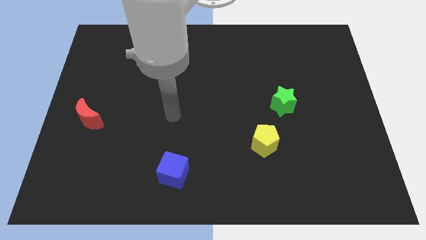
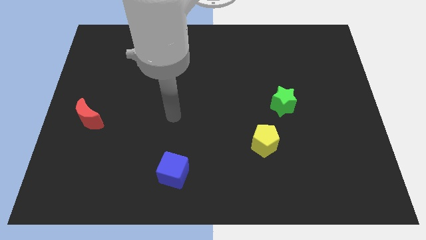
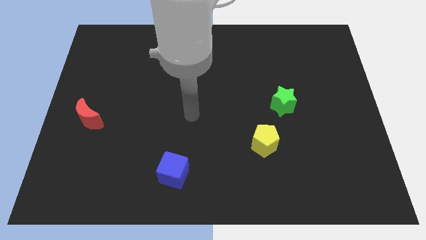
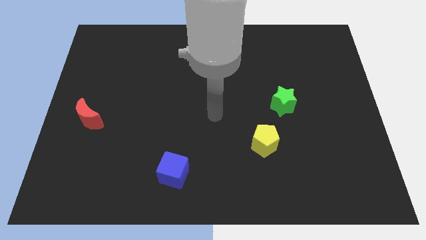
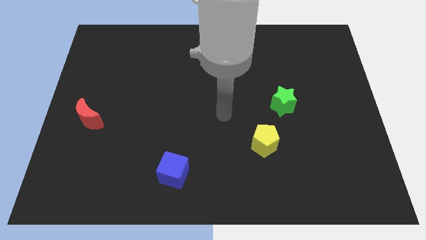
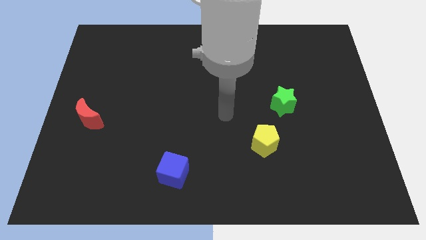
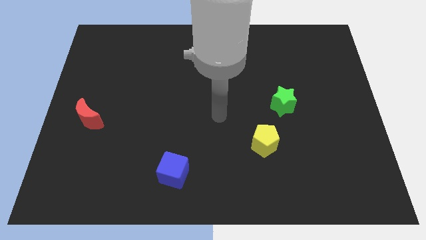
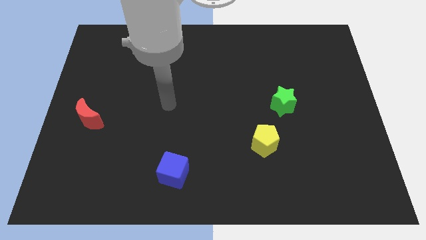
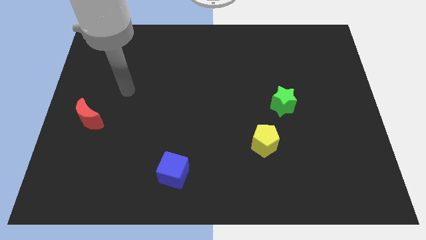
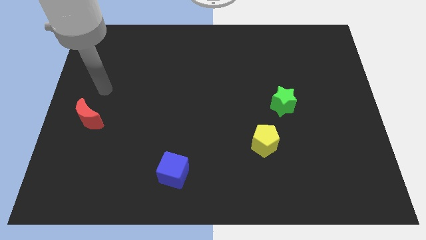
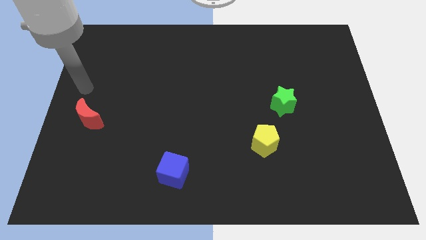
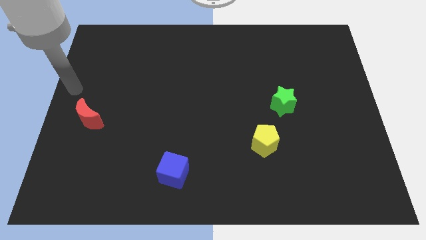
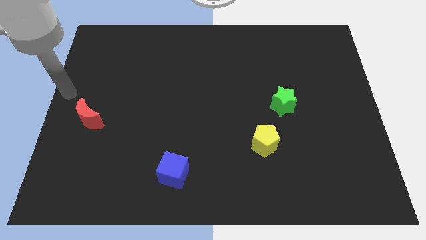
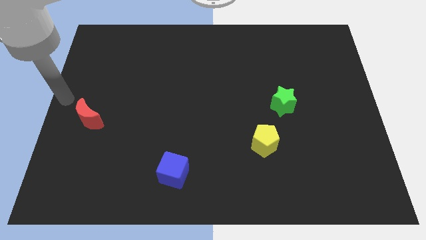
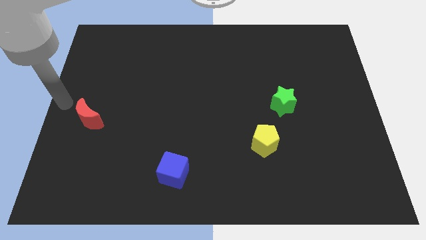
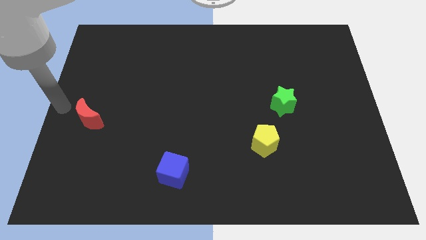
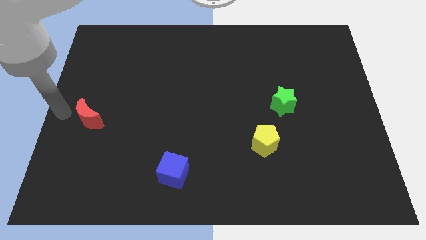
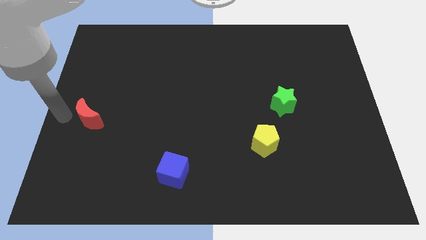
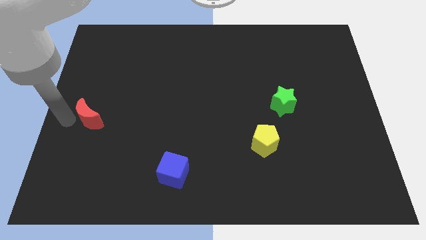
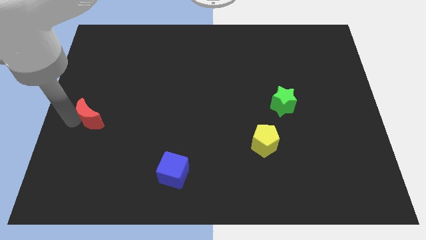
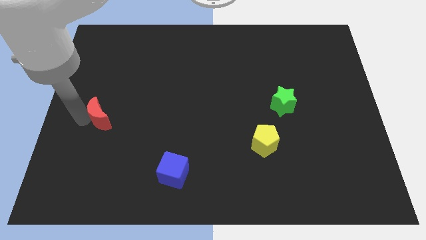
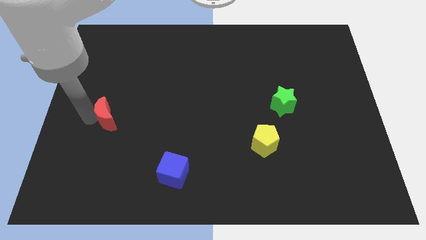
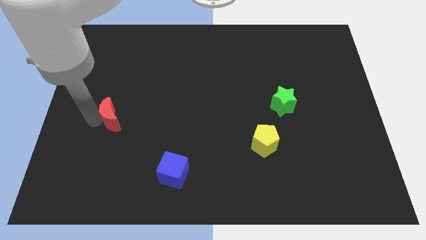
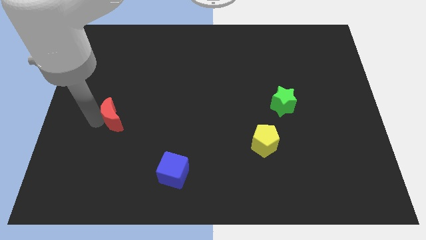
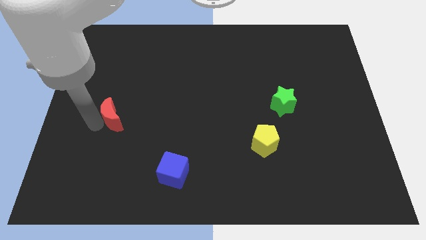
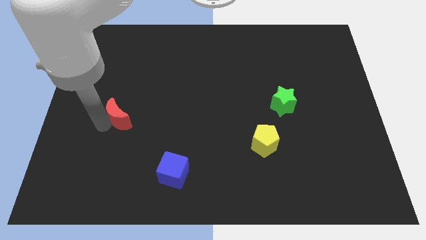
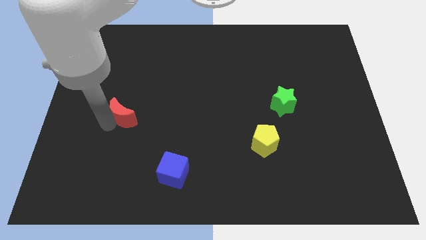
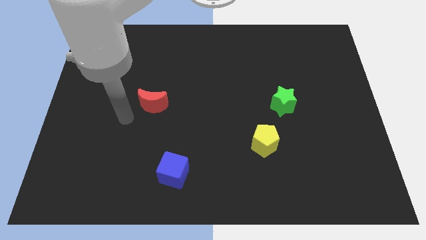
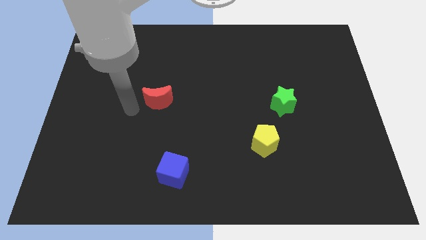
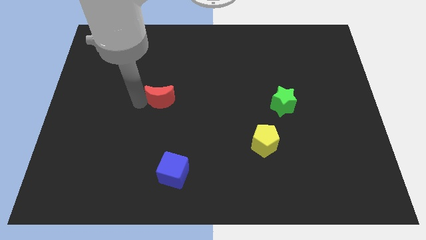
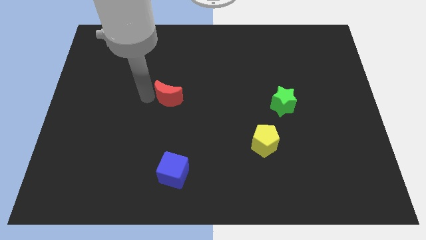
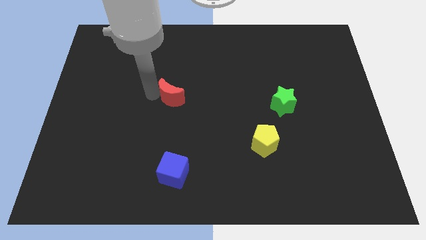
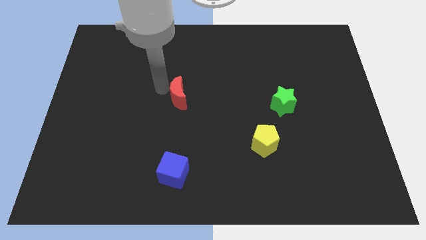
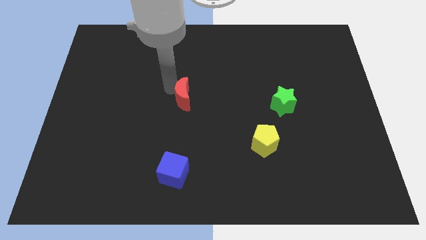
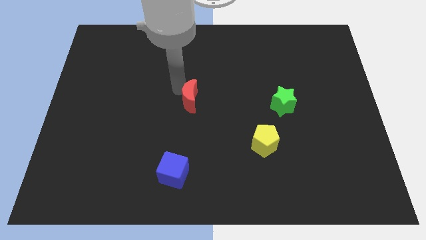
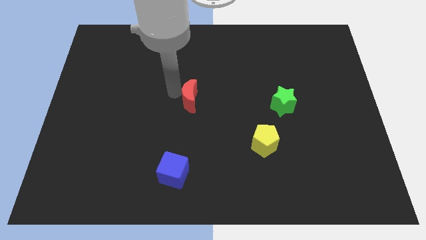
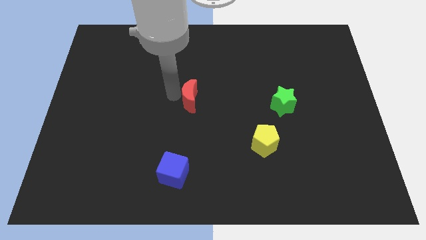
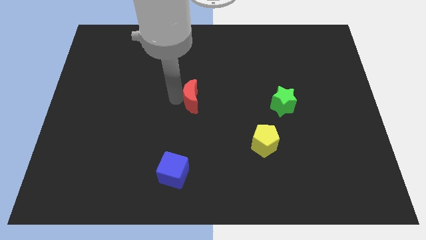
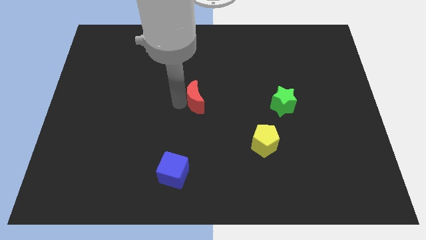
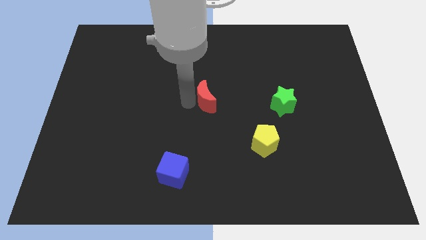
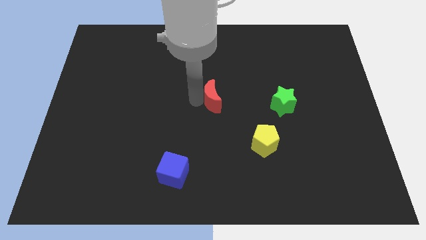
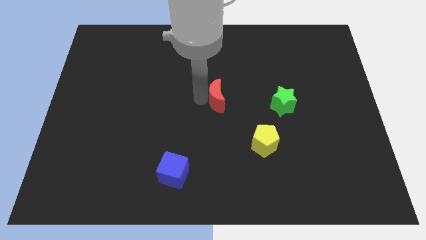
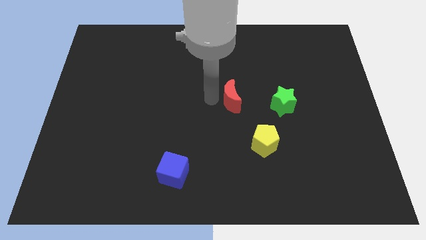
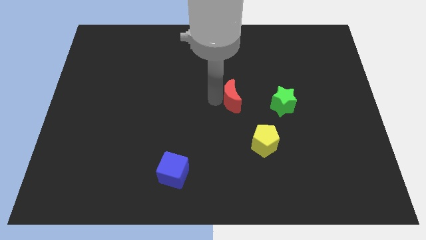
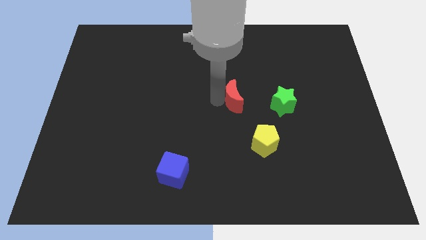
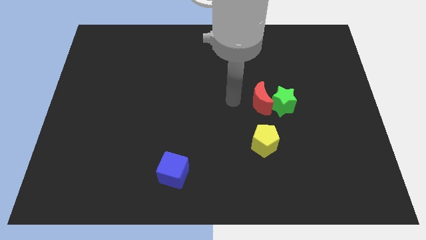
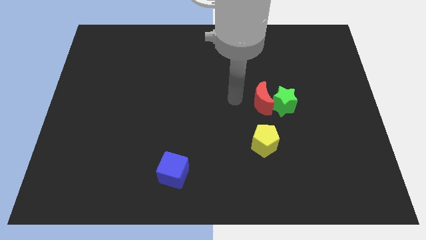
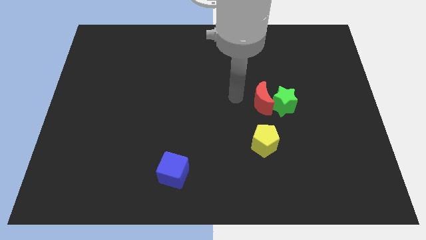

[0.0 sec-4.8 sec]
slide the moon next to the star

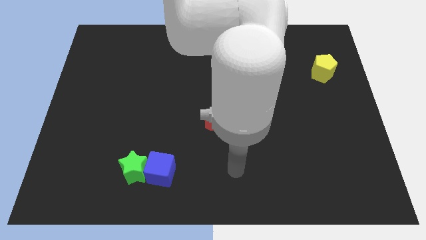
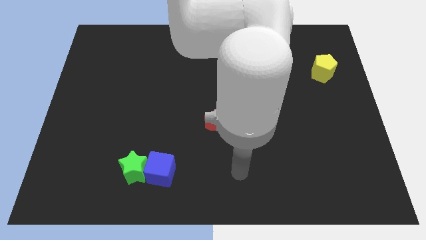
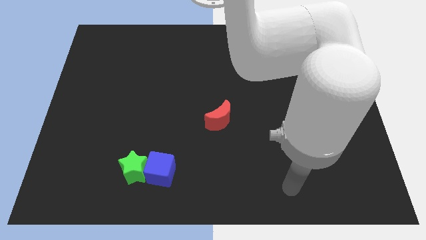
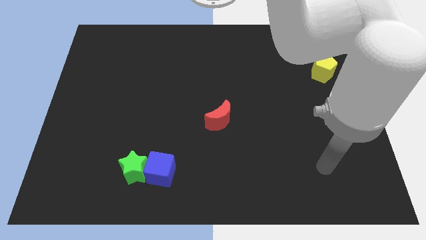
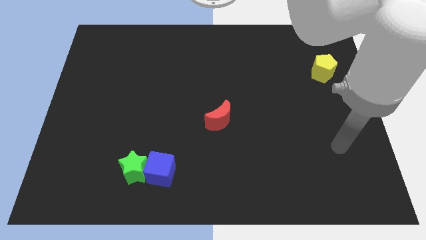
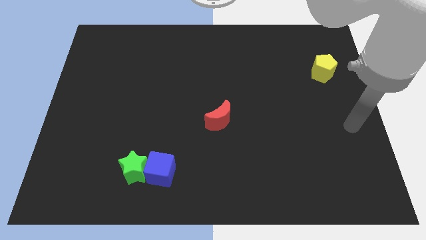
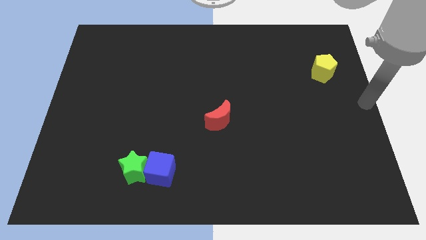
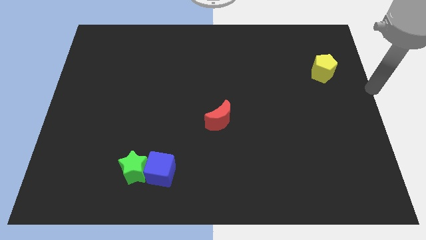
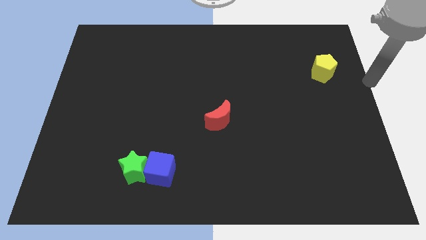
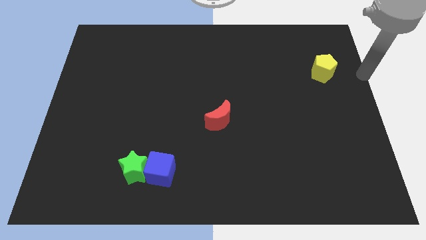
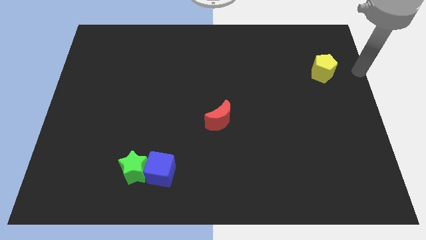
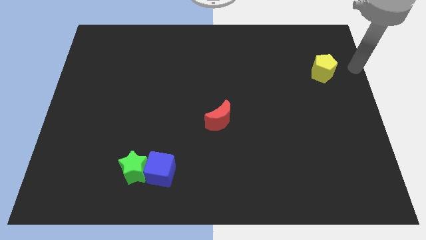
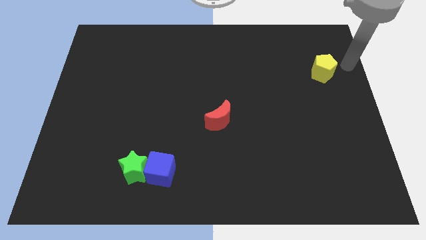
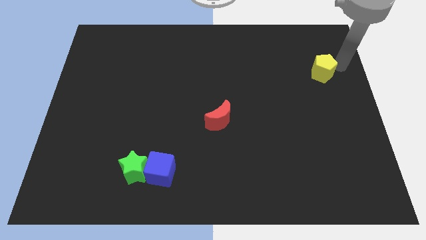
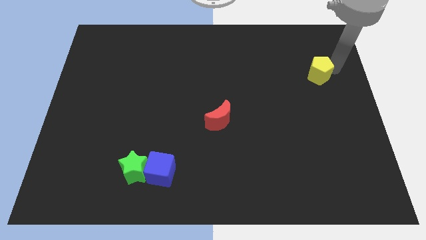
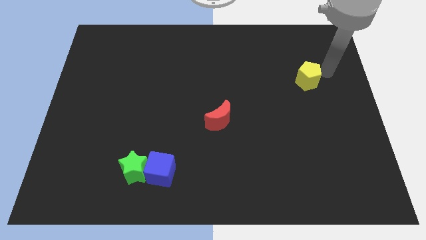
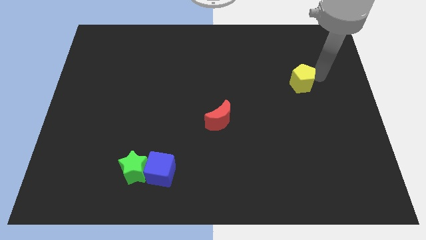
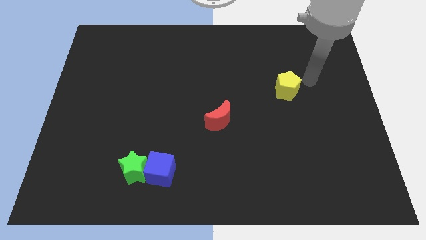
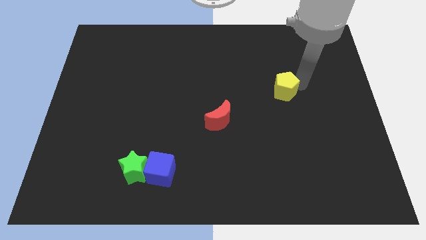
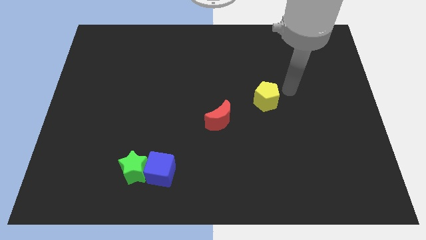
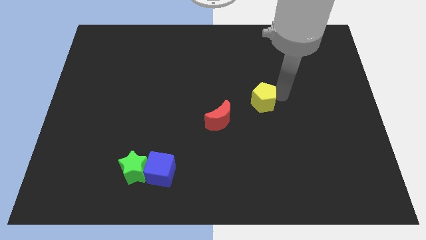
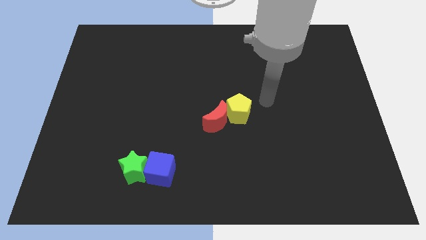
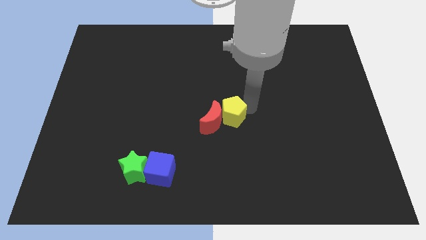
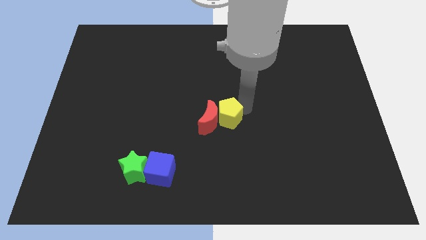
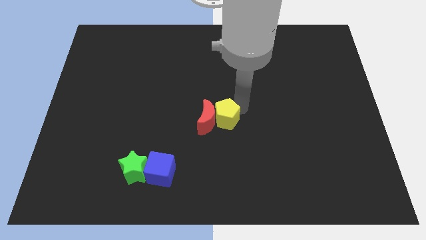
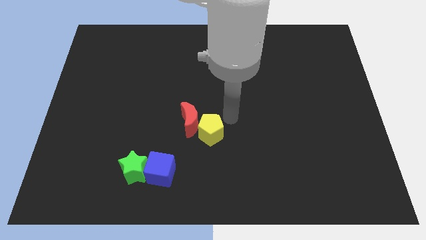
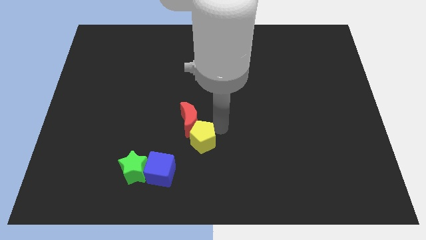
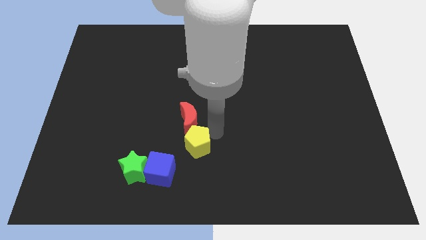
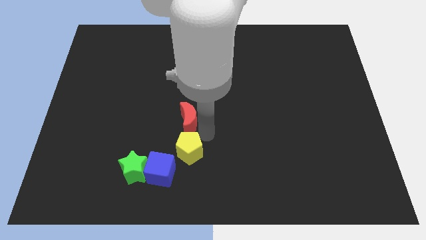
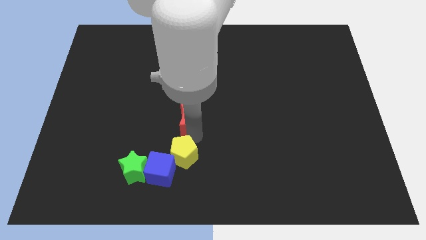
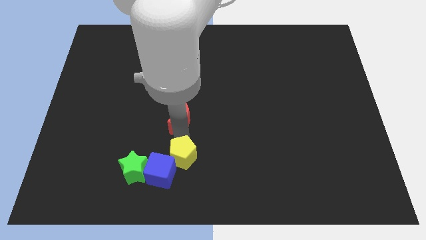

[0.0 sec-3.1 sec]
push the yellow block close to the blue cube

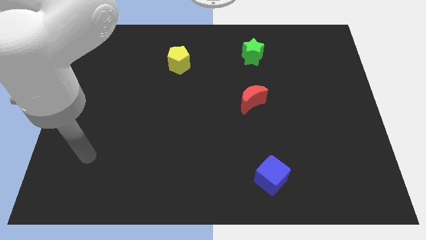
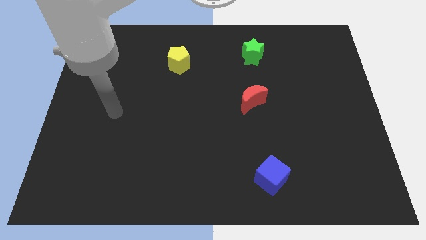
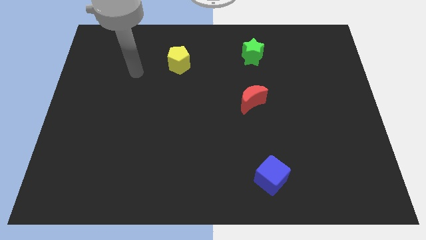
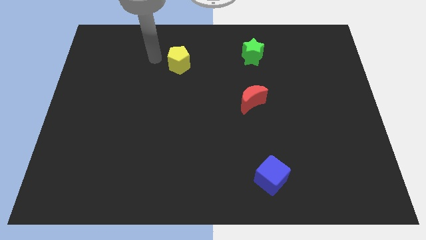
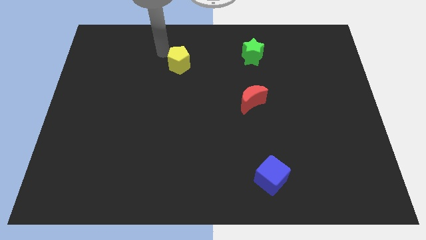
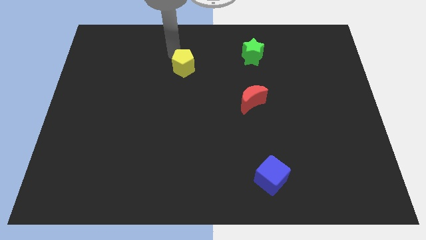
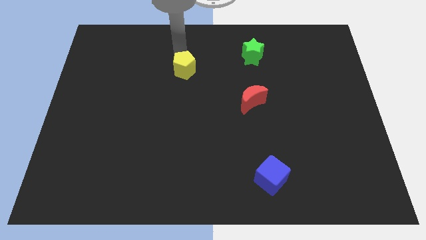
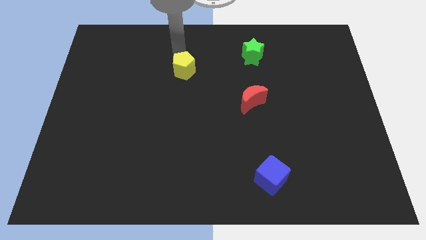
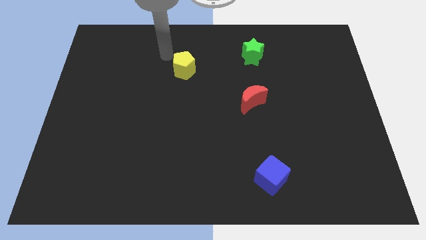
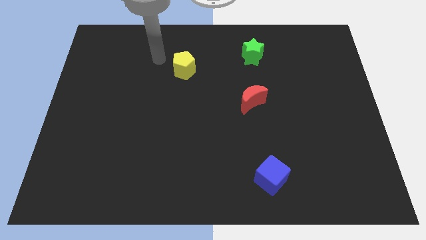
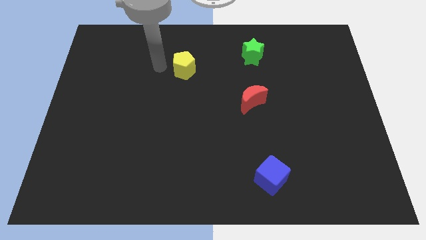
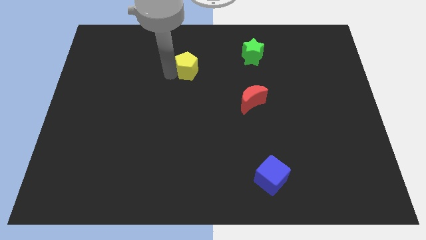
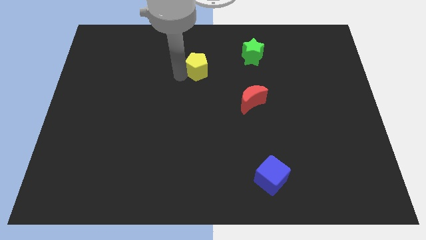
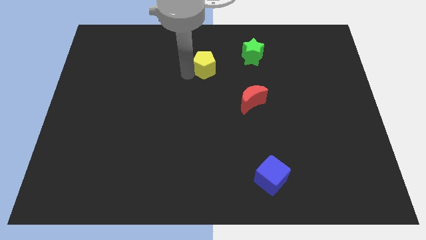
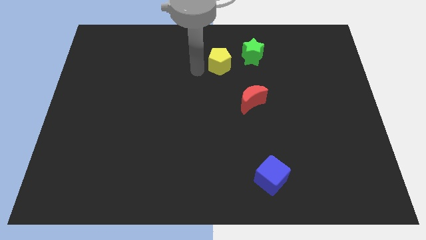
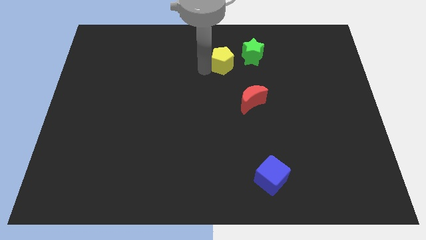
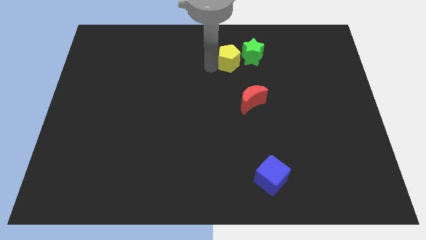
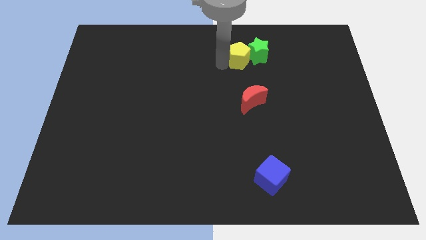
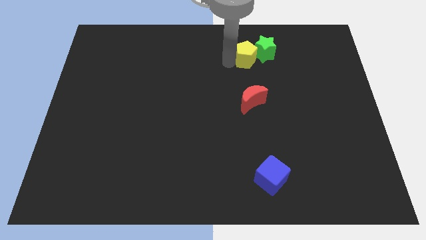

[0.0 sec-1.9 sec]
move the pentagon towards the green star
